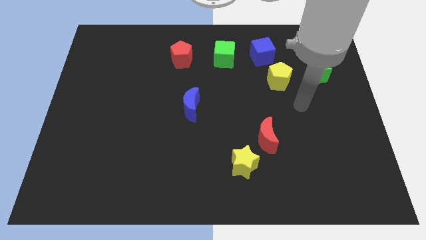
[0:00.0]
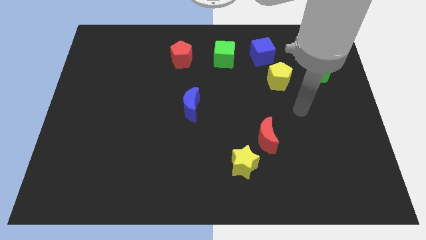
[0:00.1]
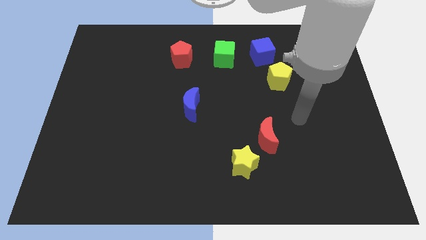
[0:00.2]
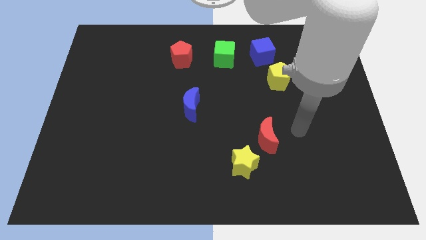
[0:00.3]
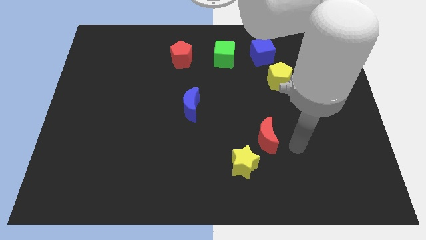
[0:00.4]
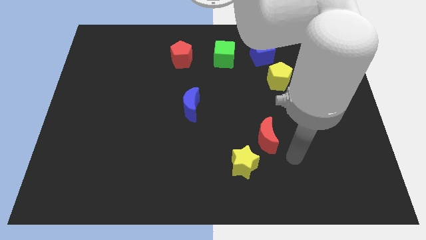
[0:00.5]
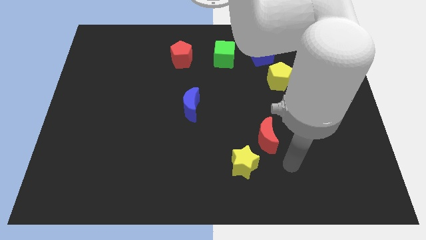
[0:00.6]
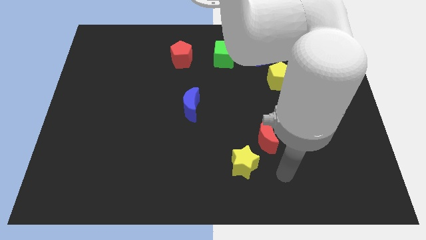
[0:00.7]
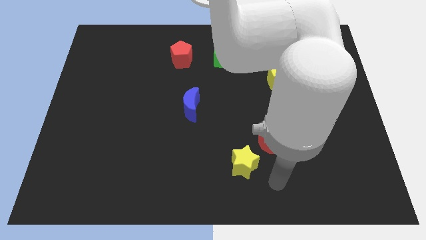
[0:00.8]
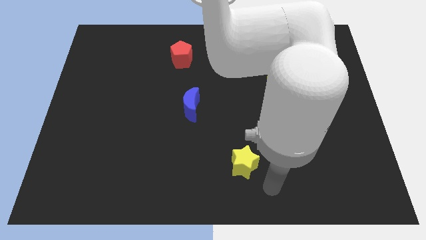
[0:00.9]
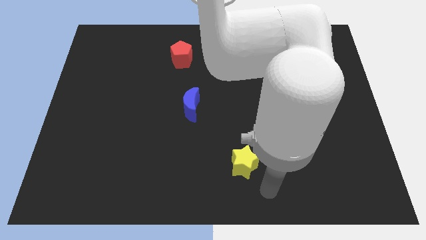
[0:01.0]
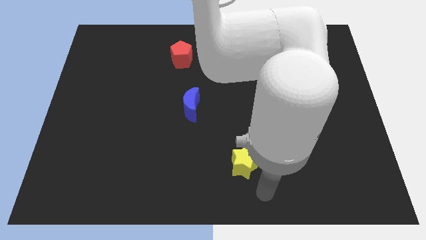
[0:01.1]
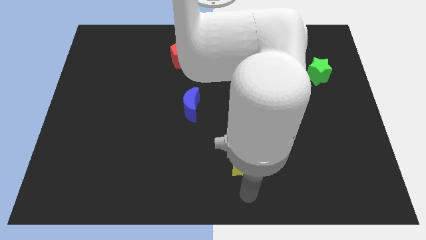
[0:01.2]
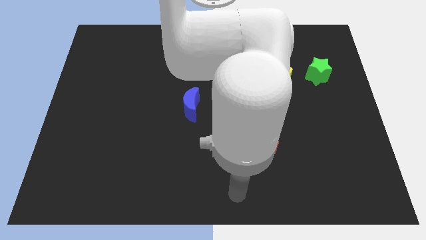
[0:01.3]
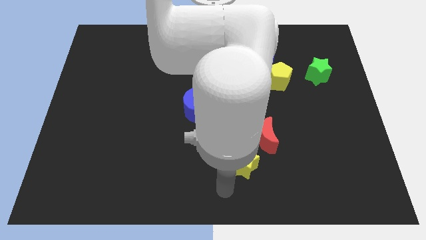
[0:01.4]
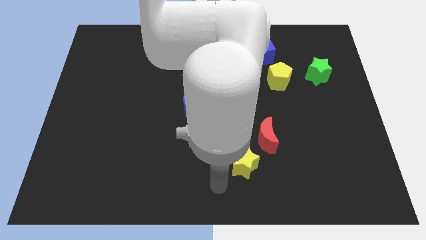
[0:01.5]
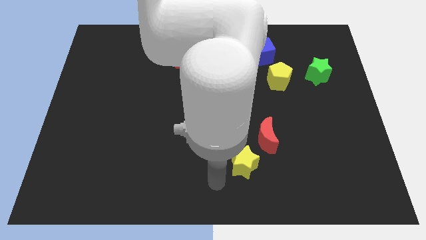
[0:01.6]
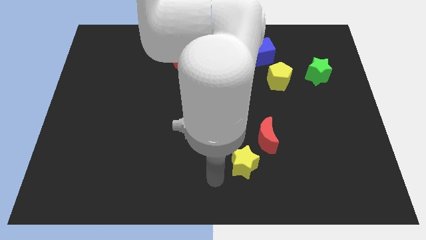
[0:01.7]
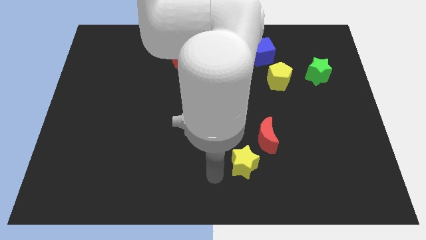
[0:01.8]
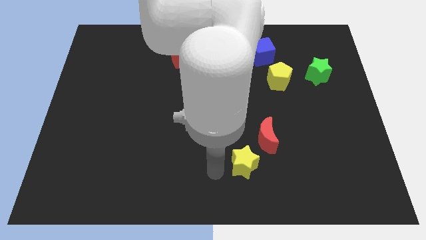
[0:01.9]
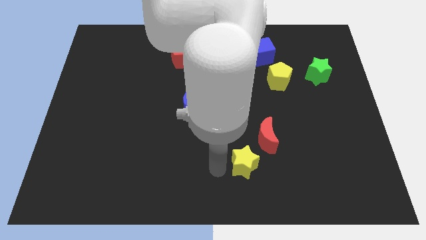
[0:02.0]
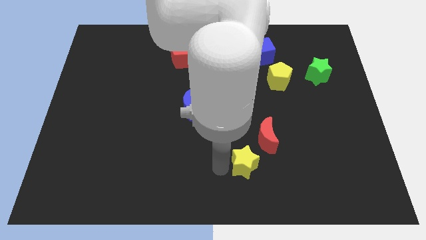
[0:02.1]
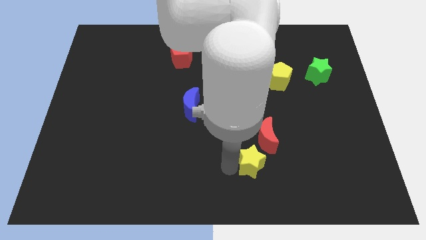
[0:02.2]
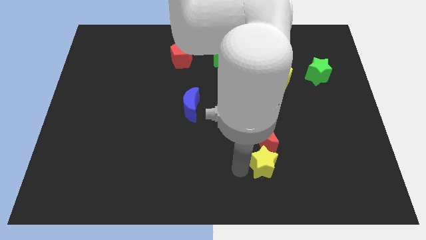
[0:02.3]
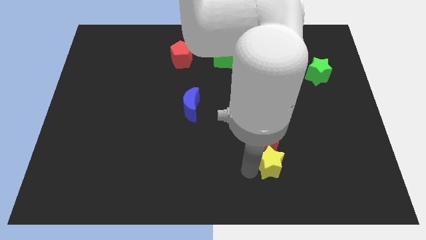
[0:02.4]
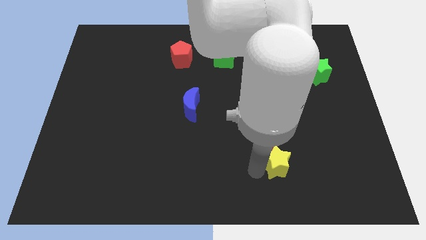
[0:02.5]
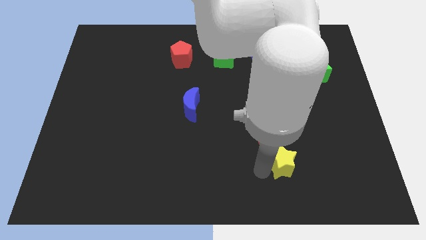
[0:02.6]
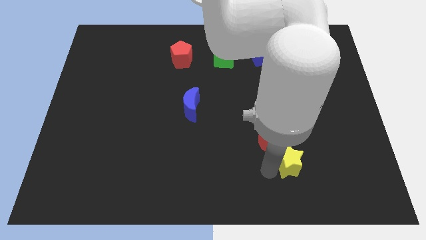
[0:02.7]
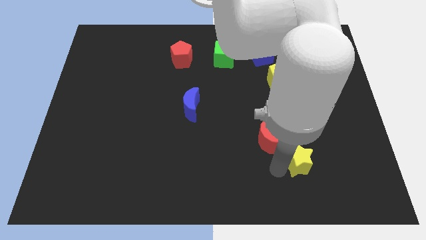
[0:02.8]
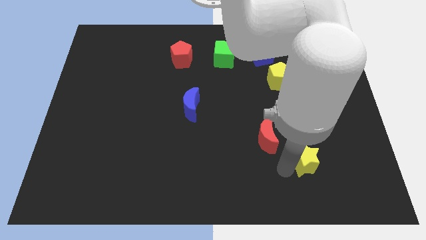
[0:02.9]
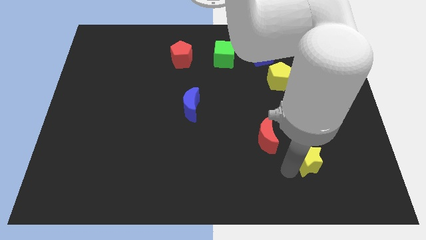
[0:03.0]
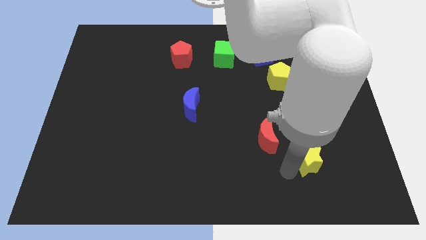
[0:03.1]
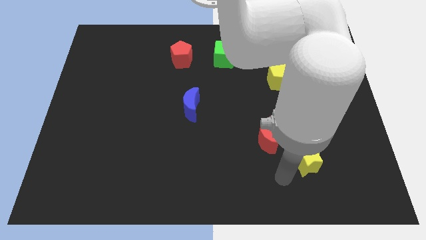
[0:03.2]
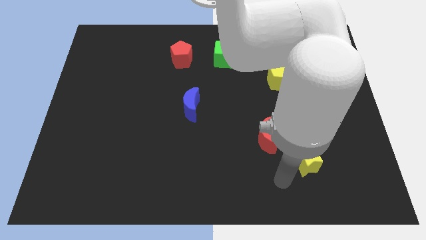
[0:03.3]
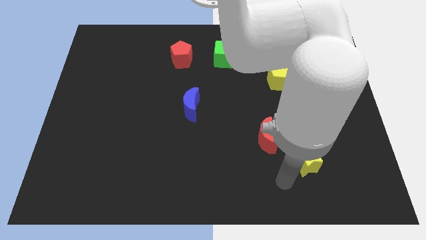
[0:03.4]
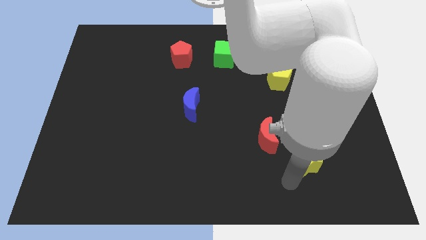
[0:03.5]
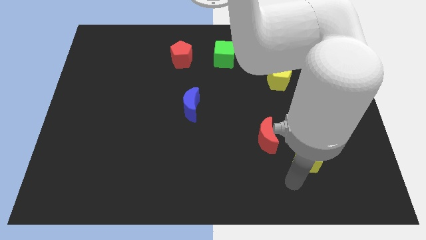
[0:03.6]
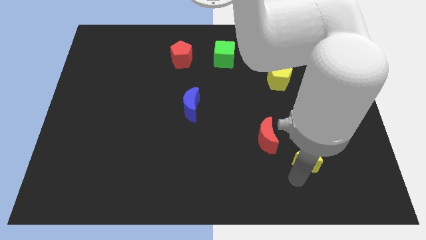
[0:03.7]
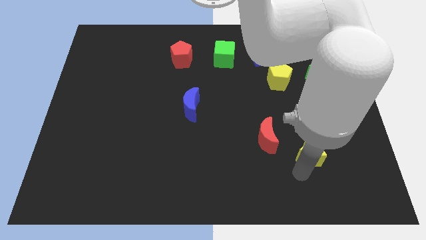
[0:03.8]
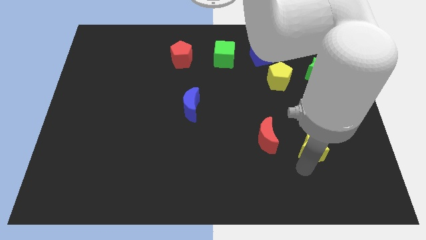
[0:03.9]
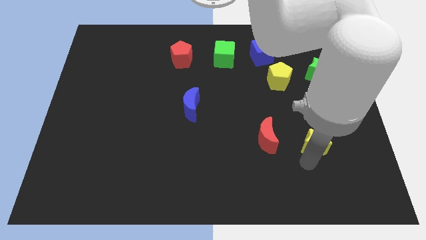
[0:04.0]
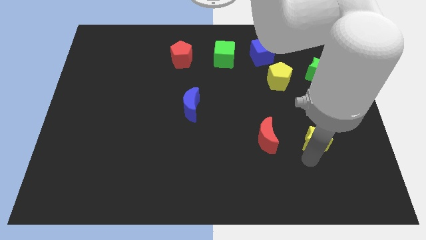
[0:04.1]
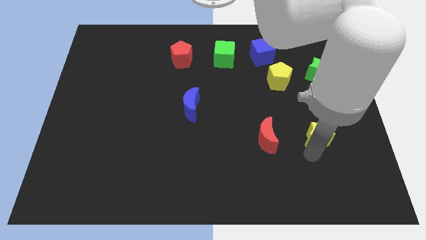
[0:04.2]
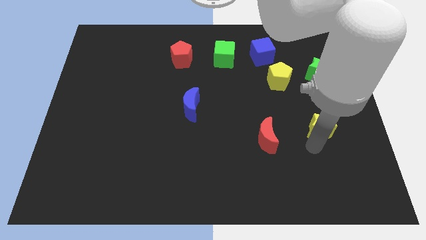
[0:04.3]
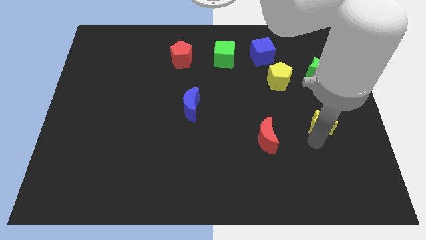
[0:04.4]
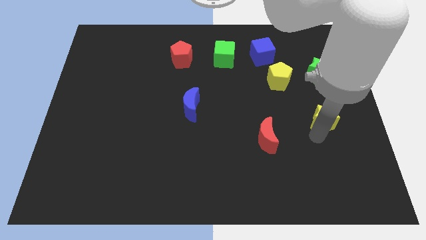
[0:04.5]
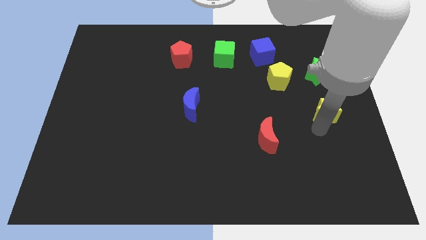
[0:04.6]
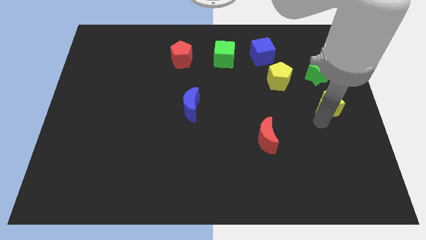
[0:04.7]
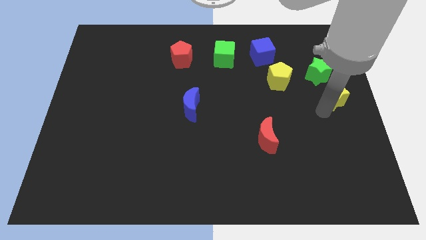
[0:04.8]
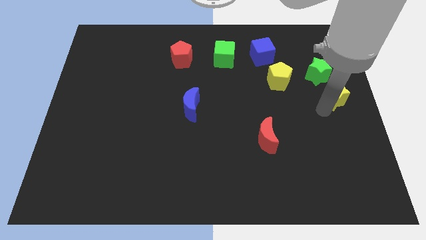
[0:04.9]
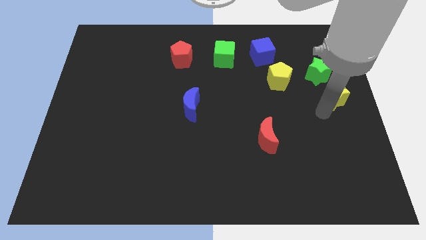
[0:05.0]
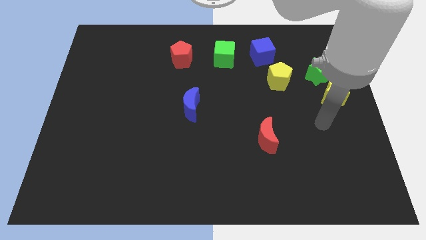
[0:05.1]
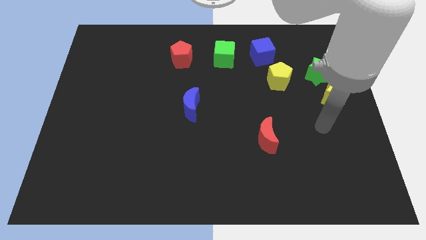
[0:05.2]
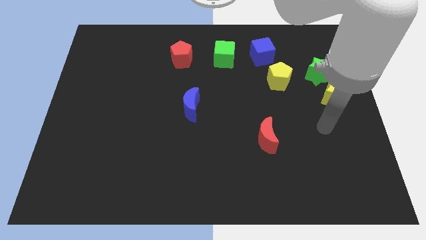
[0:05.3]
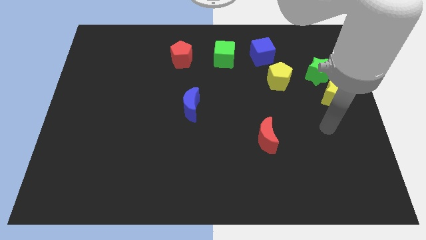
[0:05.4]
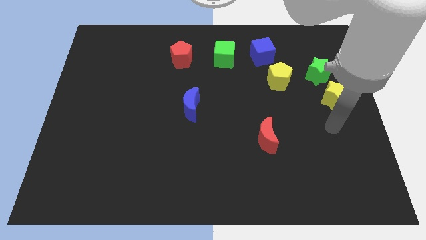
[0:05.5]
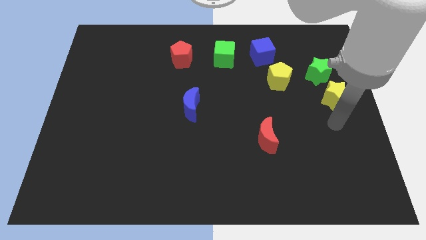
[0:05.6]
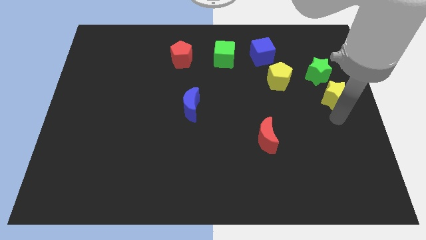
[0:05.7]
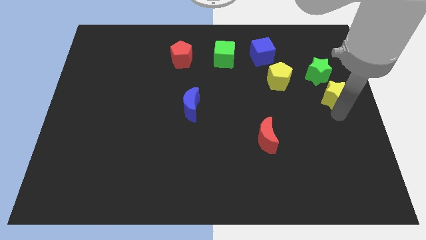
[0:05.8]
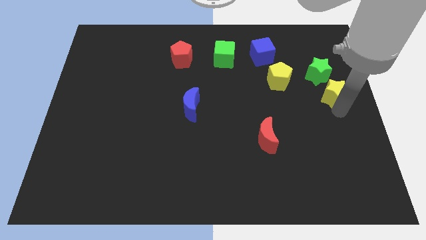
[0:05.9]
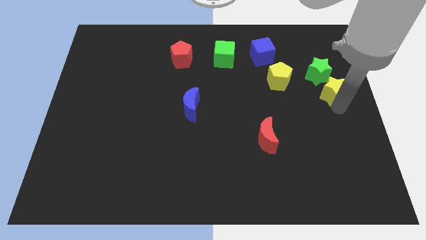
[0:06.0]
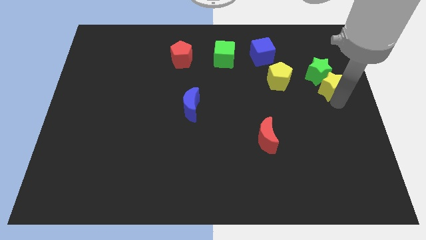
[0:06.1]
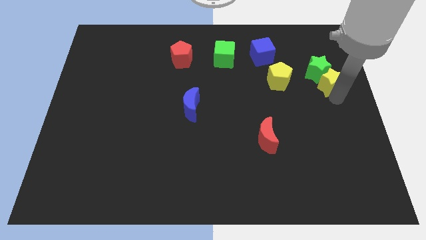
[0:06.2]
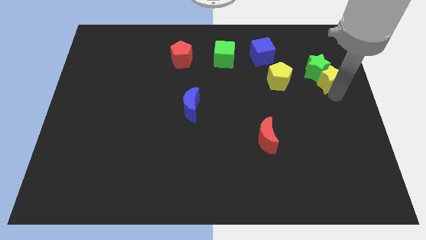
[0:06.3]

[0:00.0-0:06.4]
put the yellow star to the green star

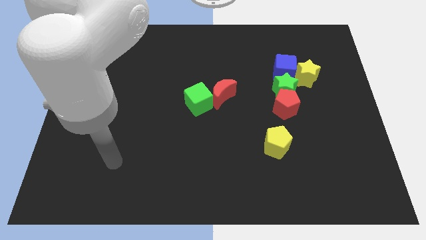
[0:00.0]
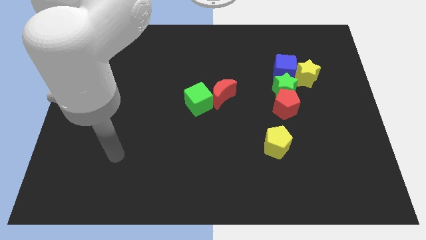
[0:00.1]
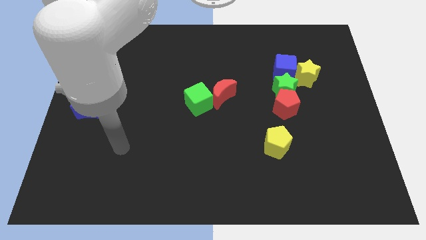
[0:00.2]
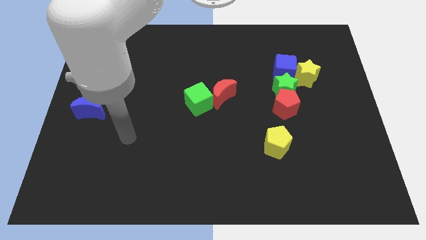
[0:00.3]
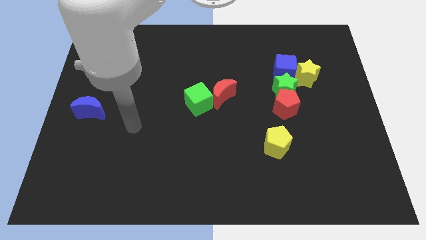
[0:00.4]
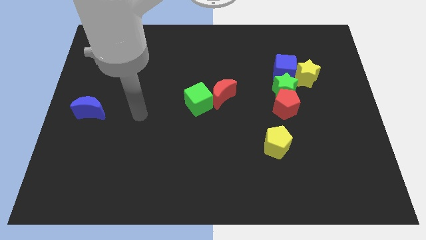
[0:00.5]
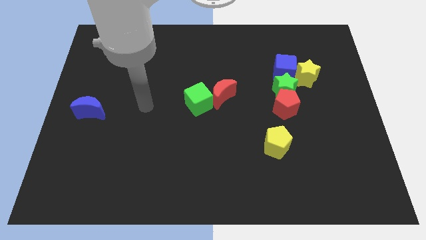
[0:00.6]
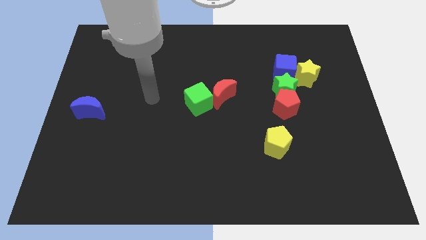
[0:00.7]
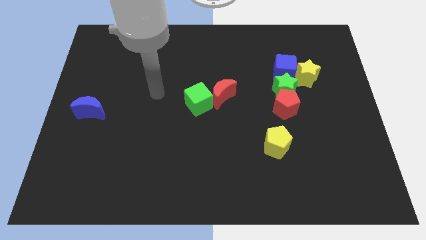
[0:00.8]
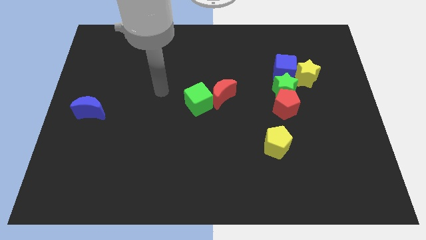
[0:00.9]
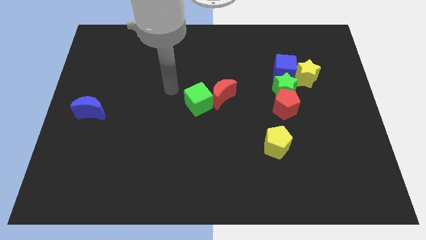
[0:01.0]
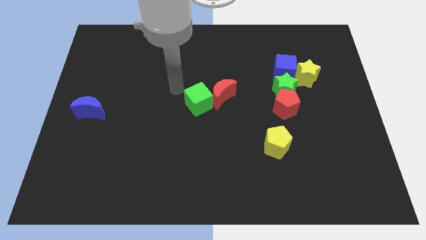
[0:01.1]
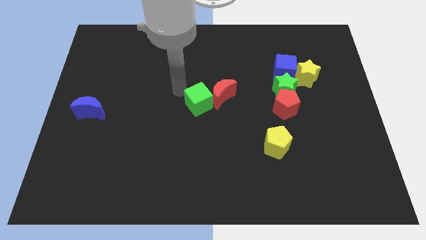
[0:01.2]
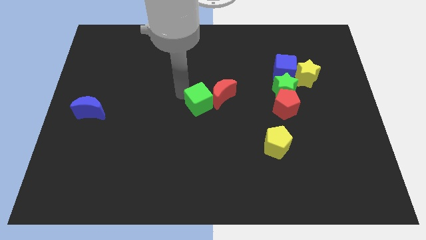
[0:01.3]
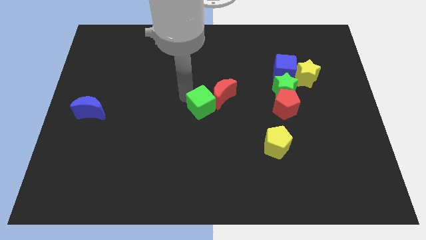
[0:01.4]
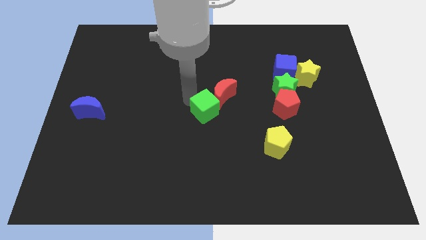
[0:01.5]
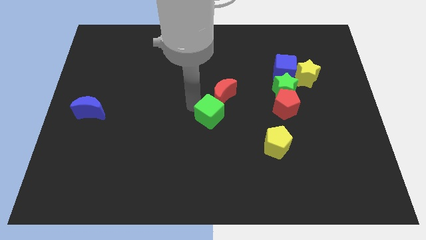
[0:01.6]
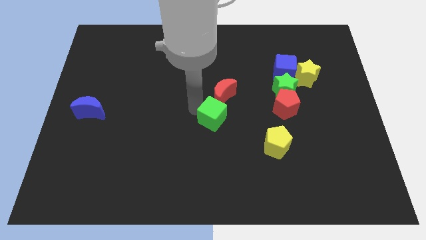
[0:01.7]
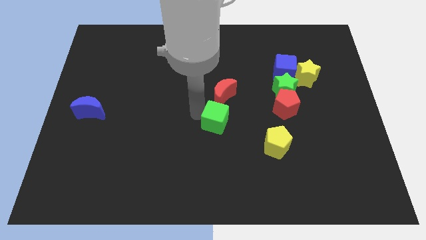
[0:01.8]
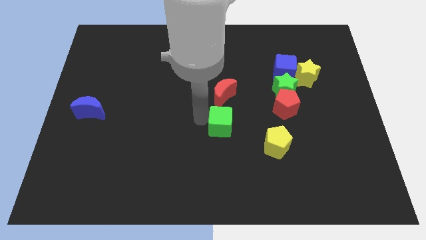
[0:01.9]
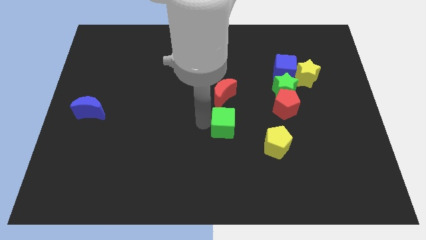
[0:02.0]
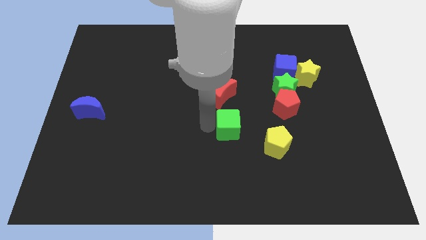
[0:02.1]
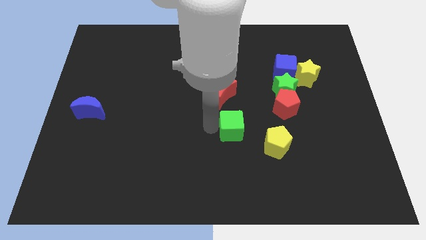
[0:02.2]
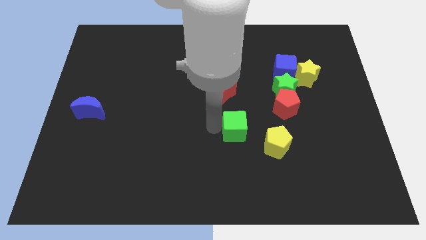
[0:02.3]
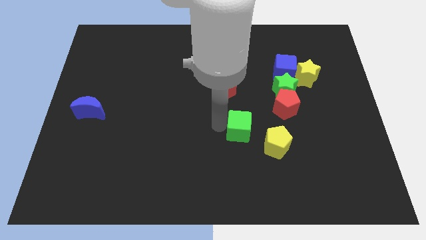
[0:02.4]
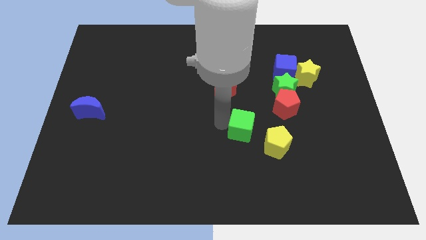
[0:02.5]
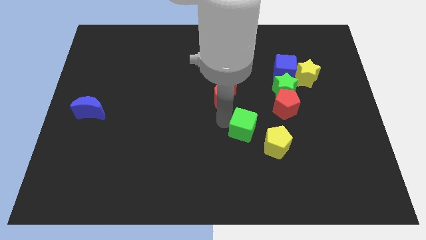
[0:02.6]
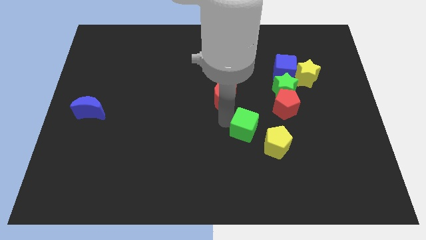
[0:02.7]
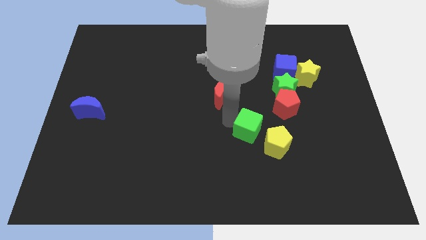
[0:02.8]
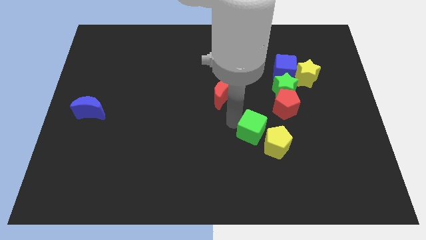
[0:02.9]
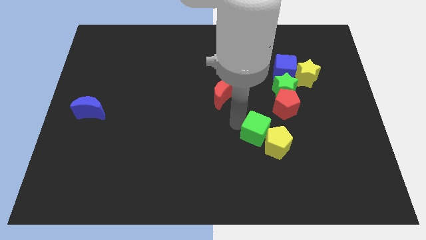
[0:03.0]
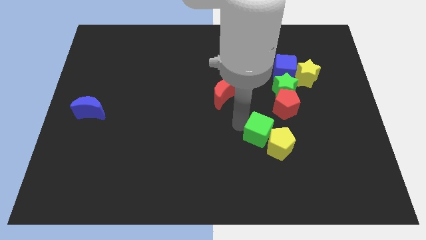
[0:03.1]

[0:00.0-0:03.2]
move the green cube towards the yellow pentagon
